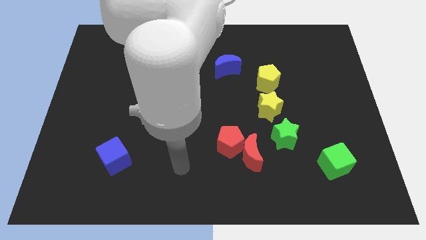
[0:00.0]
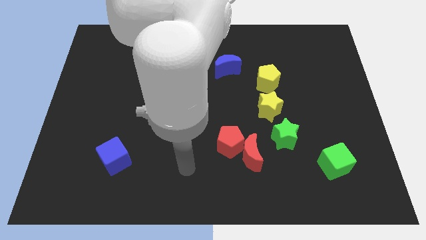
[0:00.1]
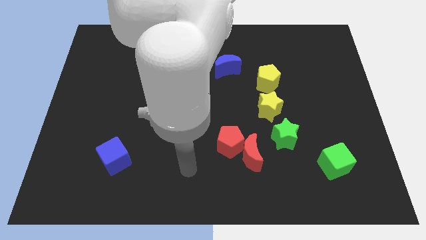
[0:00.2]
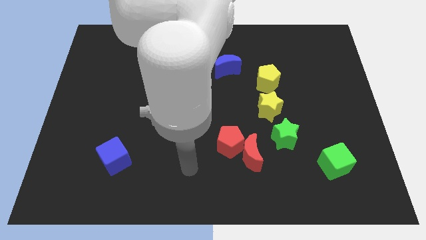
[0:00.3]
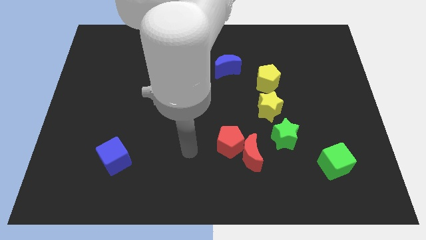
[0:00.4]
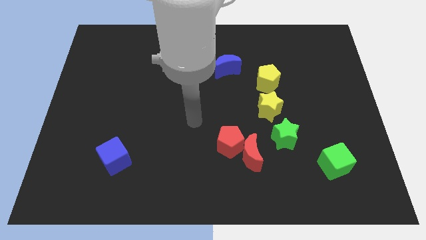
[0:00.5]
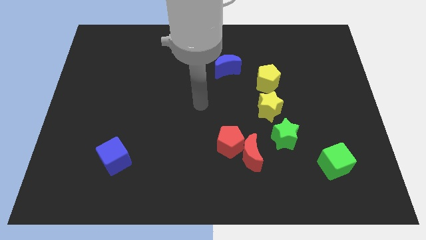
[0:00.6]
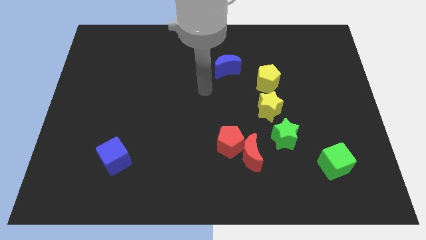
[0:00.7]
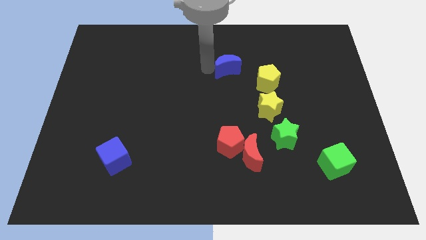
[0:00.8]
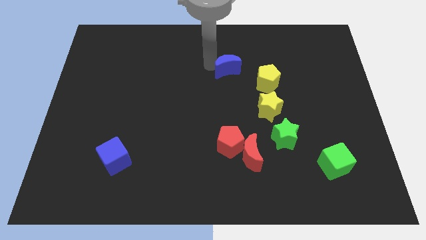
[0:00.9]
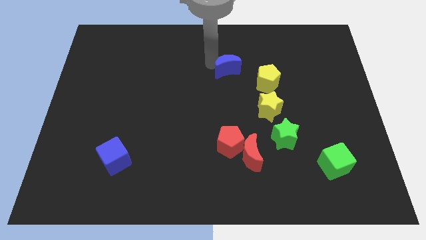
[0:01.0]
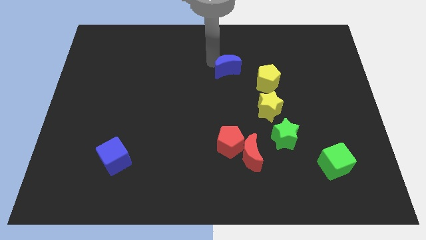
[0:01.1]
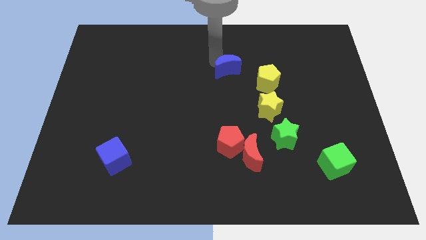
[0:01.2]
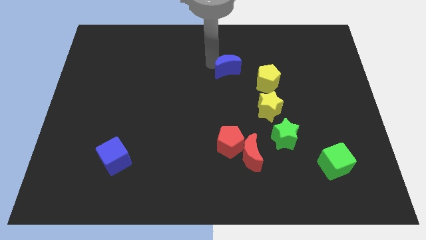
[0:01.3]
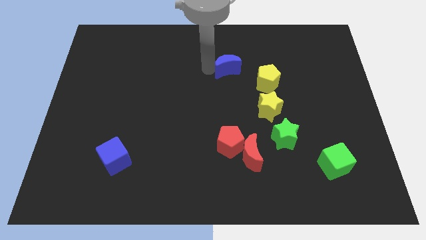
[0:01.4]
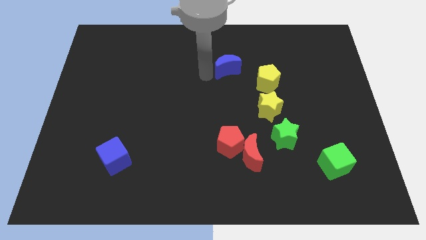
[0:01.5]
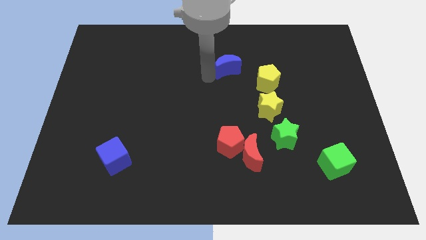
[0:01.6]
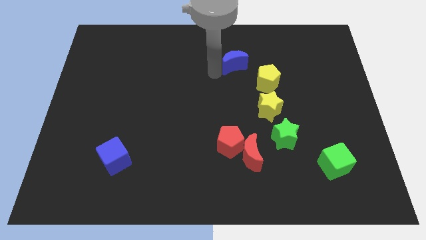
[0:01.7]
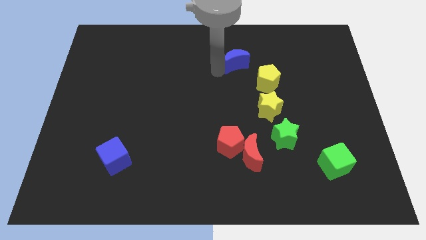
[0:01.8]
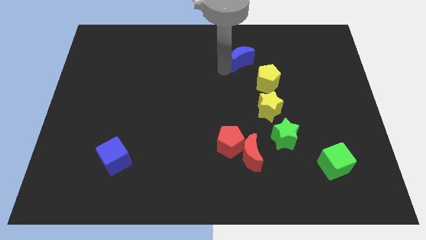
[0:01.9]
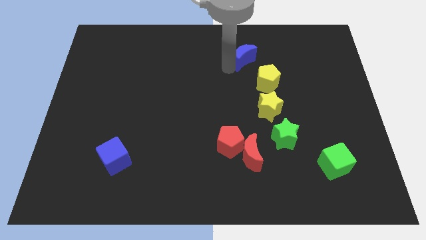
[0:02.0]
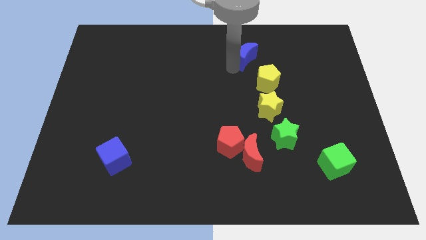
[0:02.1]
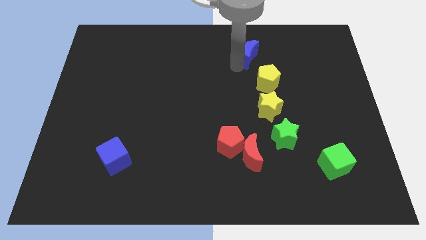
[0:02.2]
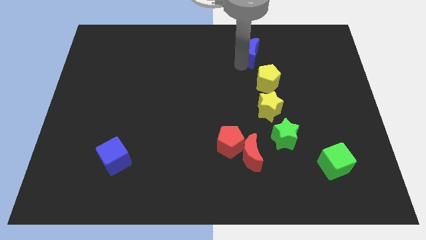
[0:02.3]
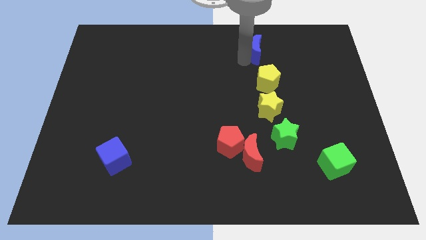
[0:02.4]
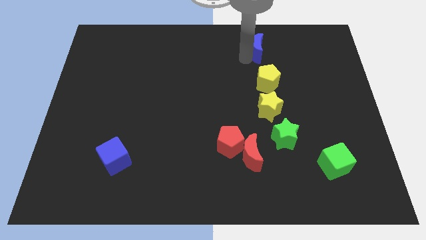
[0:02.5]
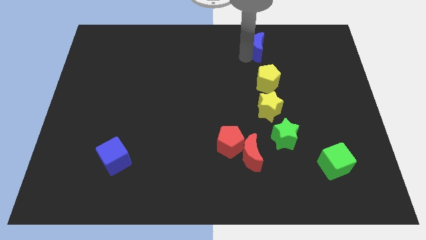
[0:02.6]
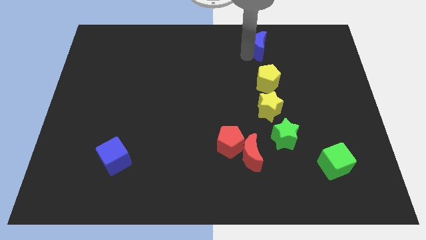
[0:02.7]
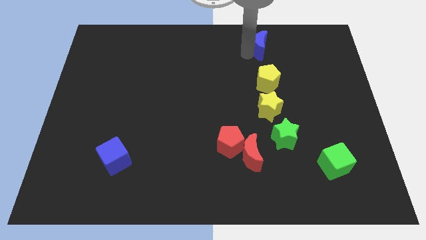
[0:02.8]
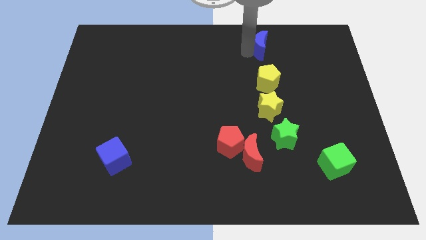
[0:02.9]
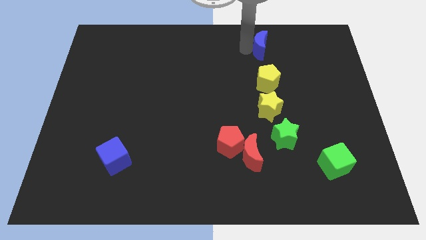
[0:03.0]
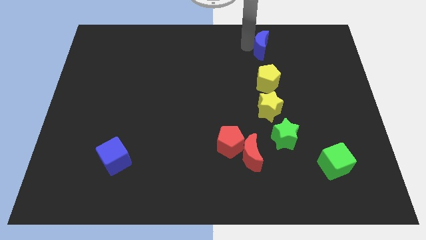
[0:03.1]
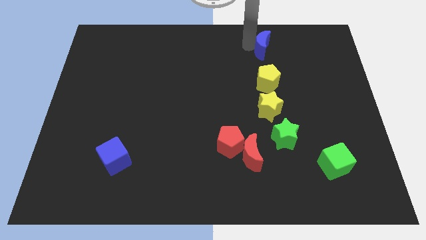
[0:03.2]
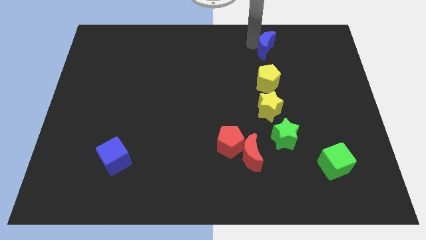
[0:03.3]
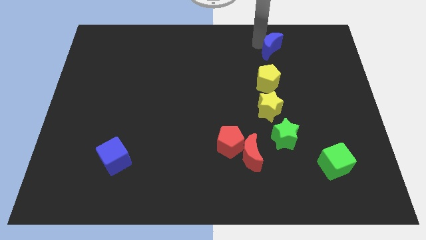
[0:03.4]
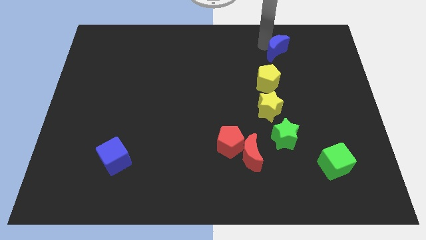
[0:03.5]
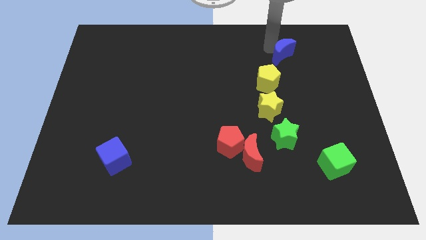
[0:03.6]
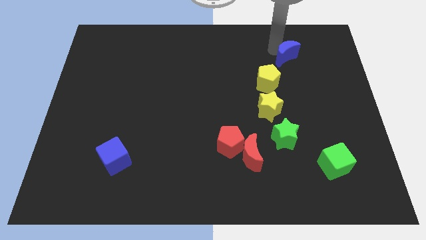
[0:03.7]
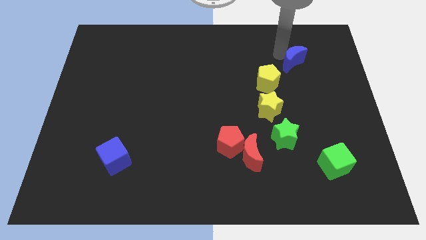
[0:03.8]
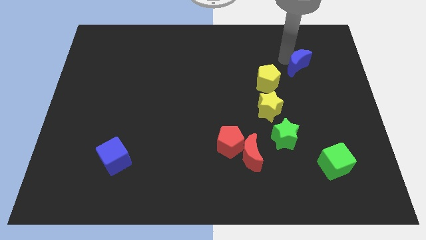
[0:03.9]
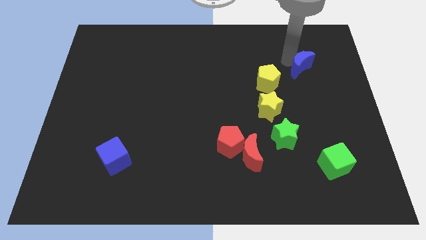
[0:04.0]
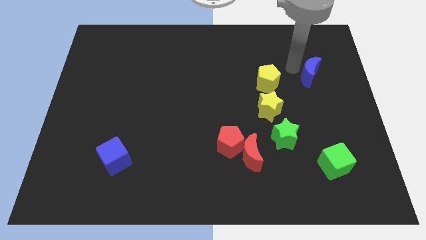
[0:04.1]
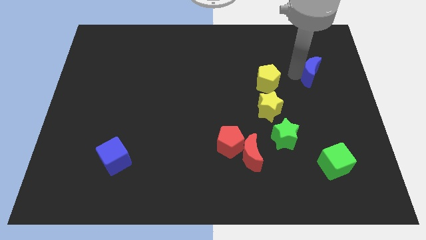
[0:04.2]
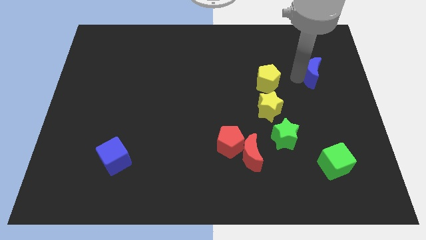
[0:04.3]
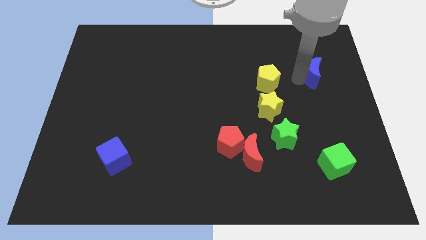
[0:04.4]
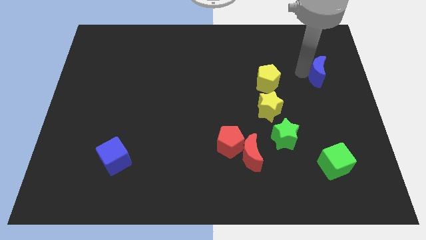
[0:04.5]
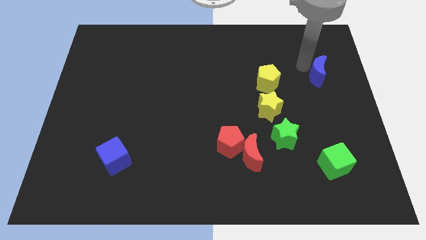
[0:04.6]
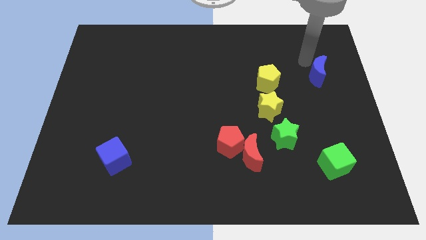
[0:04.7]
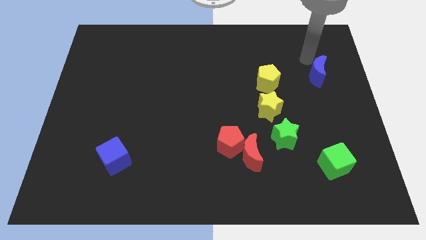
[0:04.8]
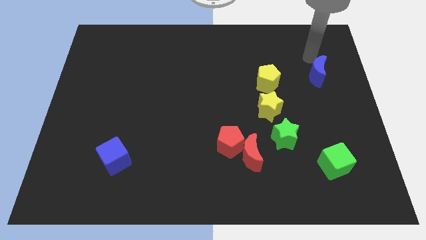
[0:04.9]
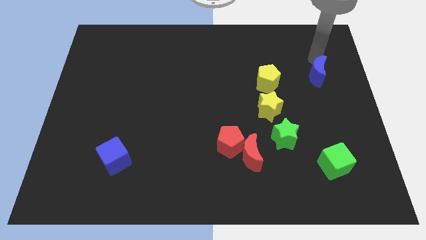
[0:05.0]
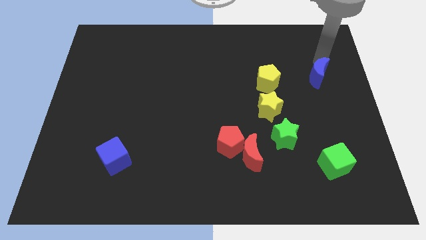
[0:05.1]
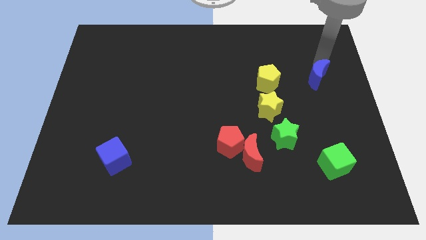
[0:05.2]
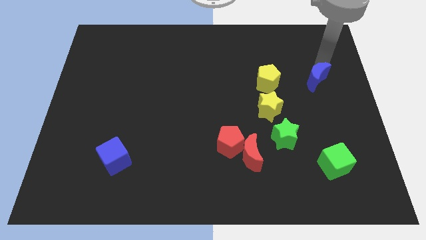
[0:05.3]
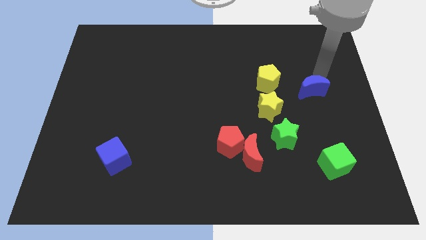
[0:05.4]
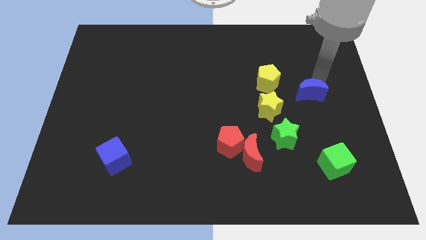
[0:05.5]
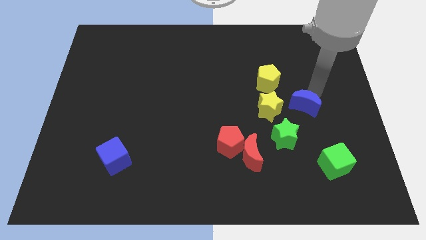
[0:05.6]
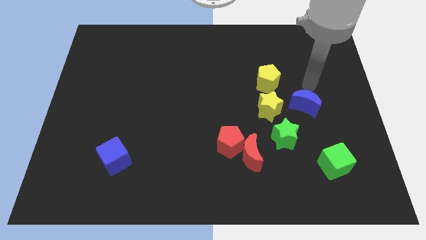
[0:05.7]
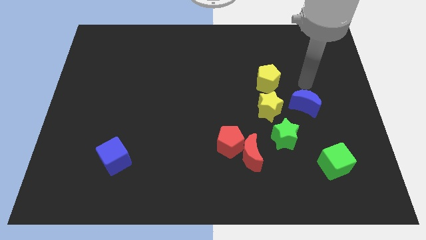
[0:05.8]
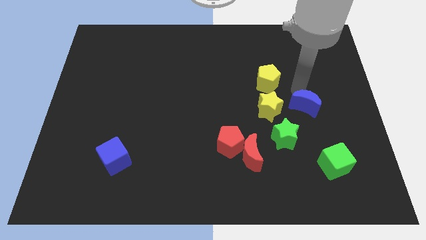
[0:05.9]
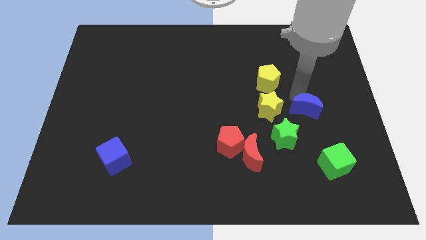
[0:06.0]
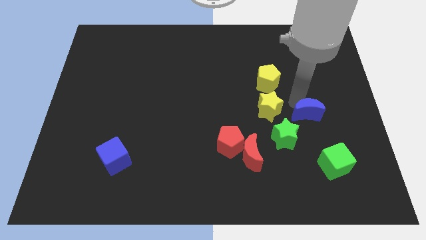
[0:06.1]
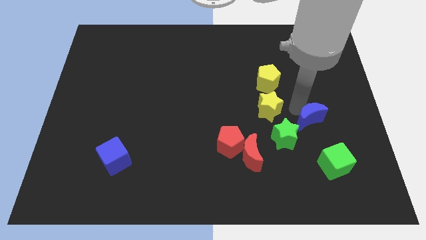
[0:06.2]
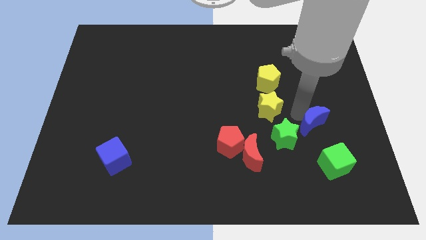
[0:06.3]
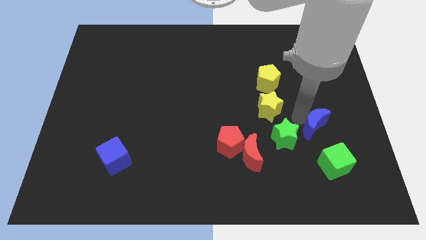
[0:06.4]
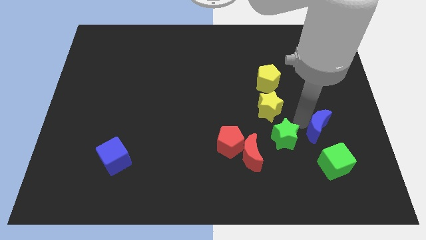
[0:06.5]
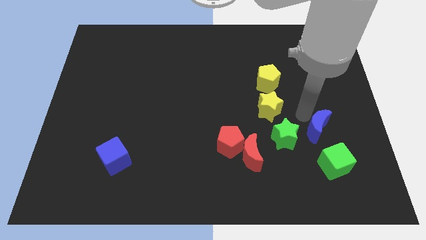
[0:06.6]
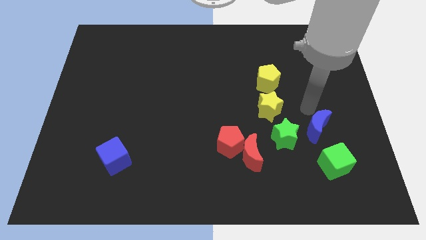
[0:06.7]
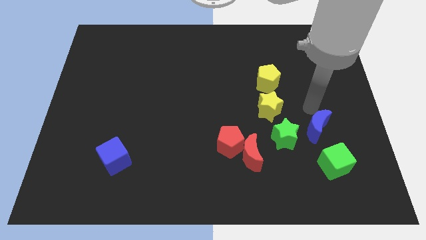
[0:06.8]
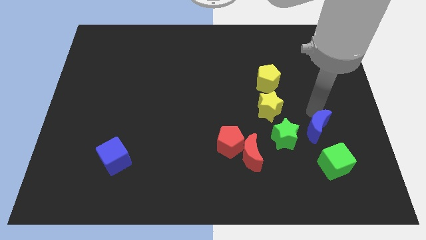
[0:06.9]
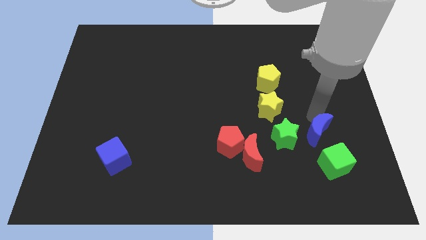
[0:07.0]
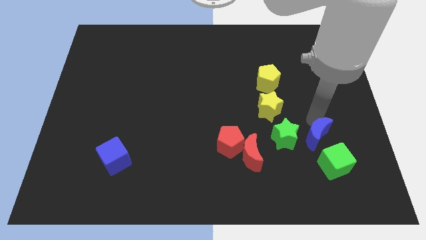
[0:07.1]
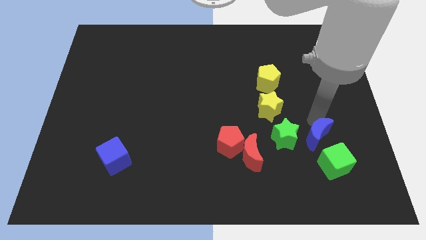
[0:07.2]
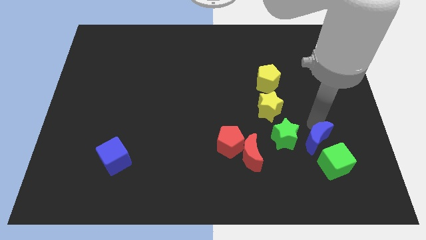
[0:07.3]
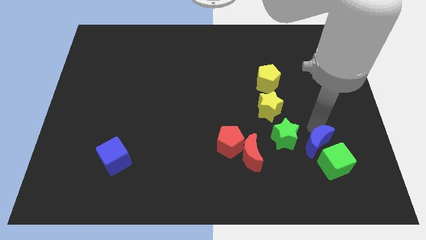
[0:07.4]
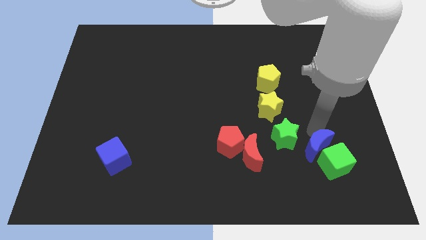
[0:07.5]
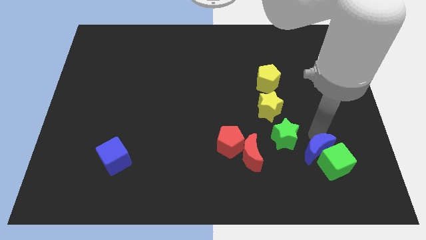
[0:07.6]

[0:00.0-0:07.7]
move the blue moon towards the green cube

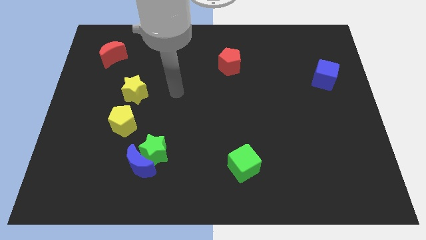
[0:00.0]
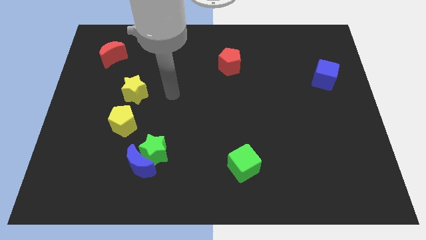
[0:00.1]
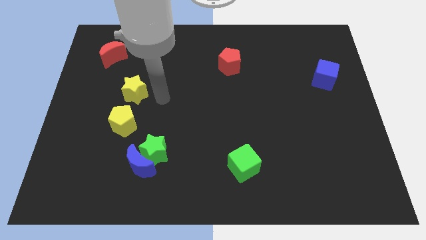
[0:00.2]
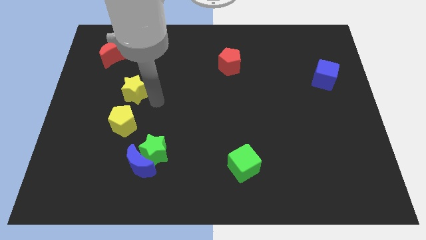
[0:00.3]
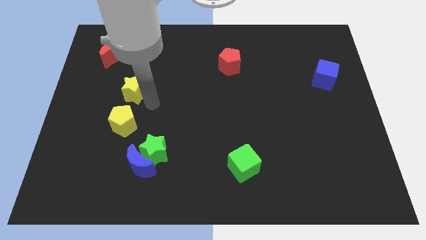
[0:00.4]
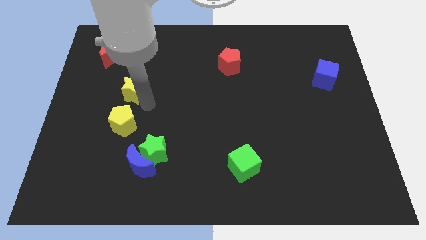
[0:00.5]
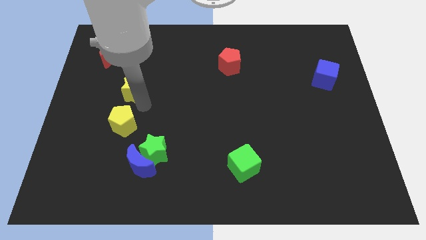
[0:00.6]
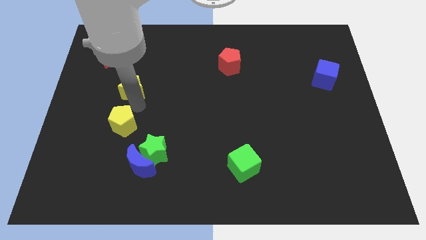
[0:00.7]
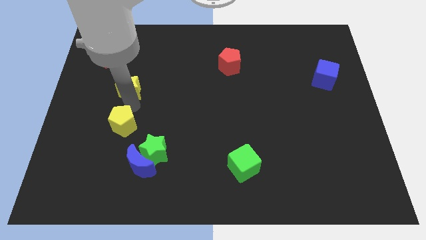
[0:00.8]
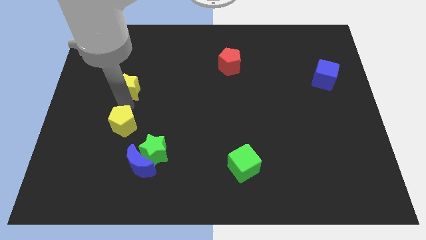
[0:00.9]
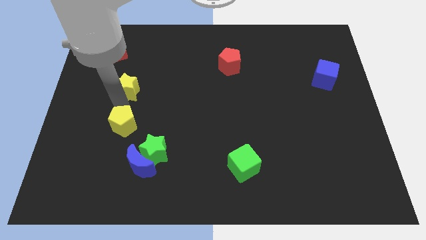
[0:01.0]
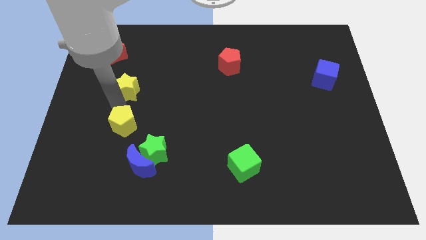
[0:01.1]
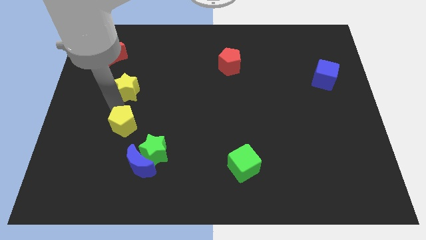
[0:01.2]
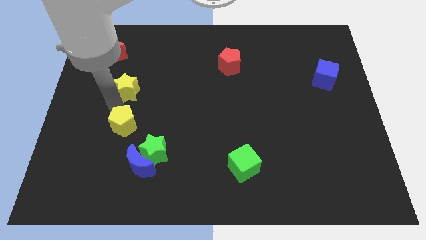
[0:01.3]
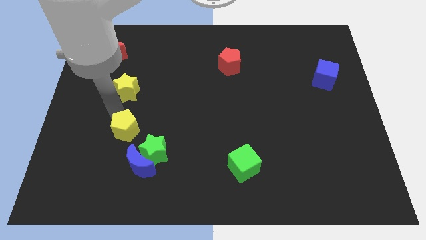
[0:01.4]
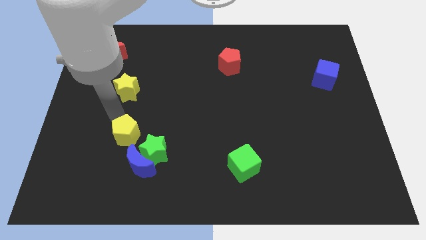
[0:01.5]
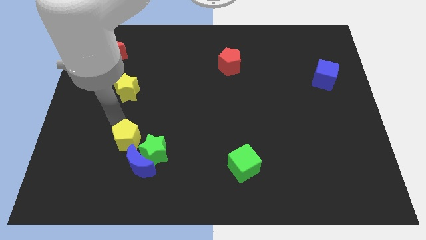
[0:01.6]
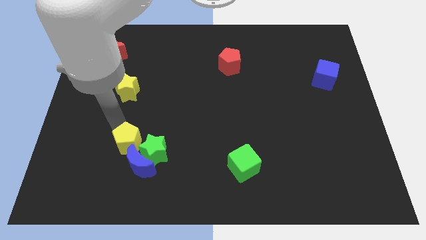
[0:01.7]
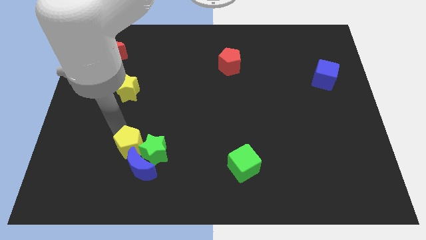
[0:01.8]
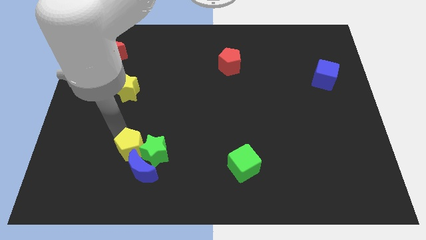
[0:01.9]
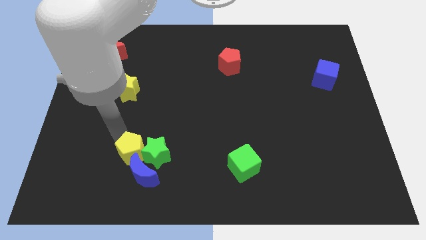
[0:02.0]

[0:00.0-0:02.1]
push the yellow pentagon close to the blue moon
